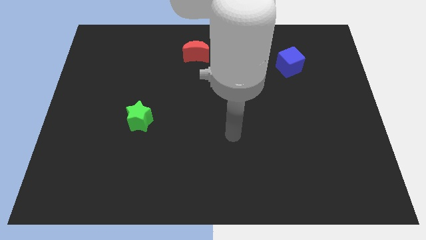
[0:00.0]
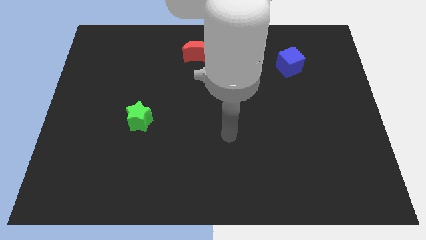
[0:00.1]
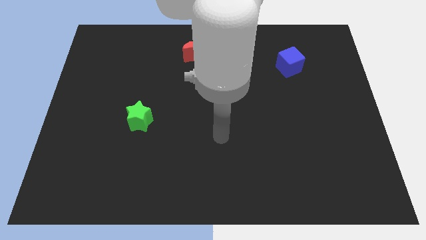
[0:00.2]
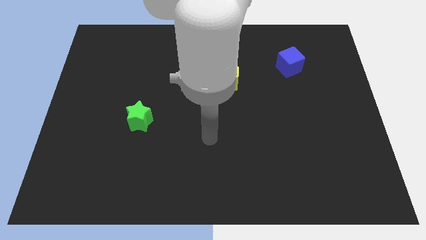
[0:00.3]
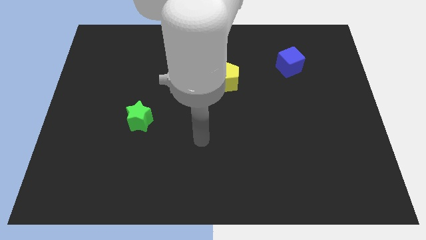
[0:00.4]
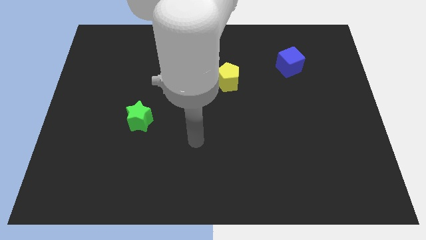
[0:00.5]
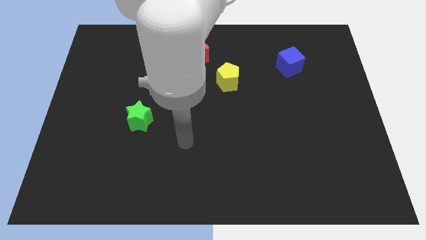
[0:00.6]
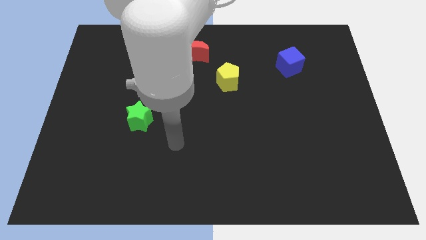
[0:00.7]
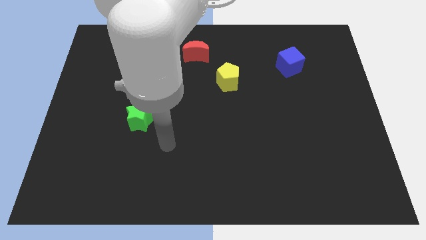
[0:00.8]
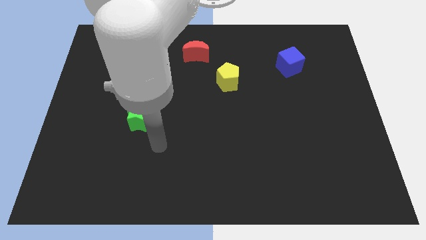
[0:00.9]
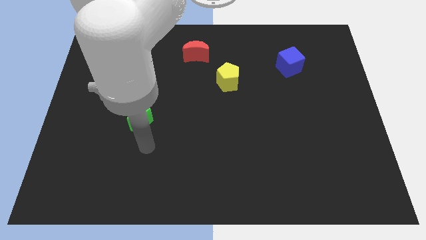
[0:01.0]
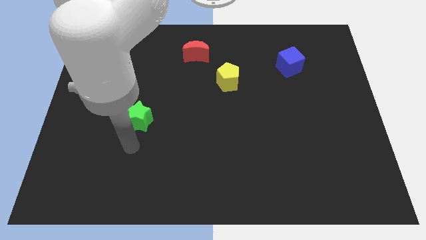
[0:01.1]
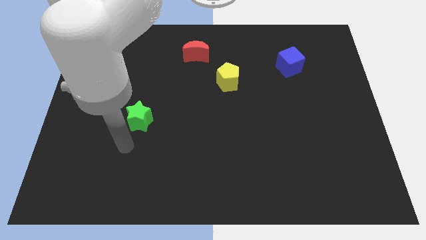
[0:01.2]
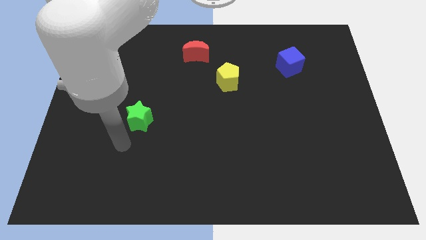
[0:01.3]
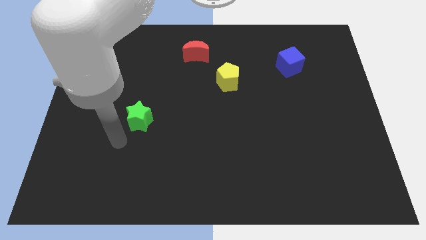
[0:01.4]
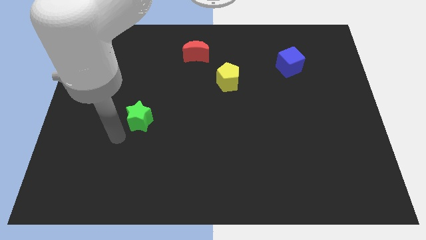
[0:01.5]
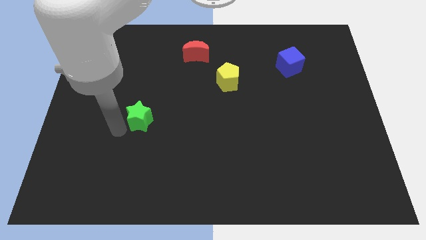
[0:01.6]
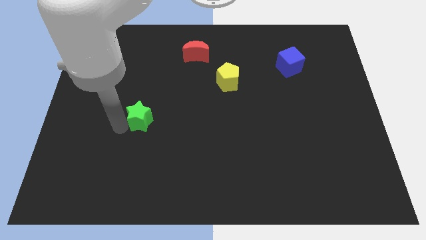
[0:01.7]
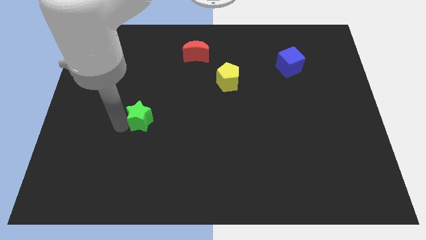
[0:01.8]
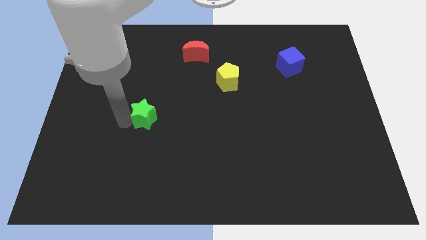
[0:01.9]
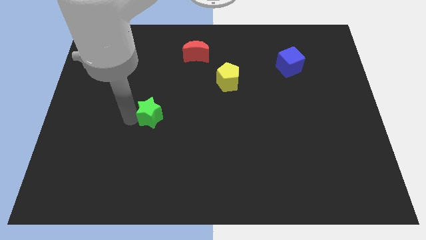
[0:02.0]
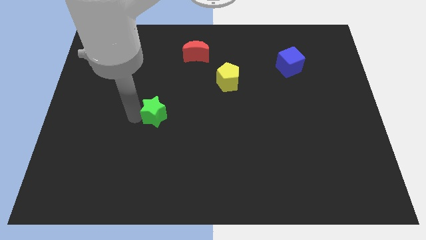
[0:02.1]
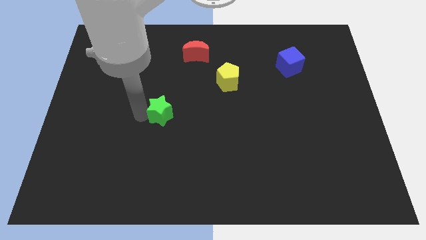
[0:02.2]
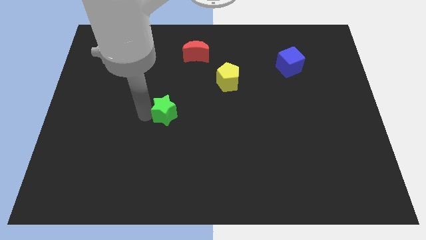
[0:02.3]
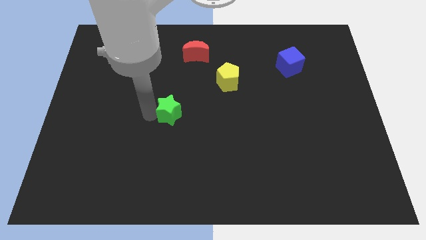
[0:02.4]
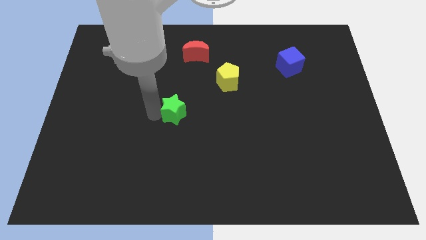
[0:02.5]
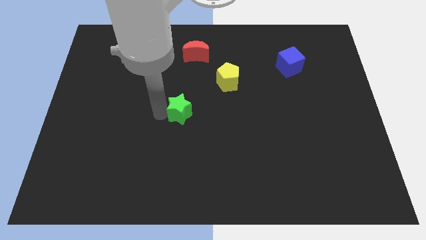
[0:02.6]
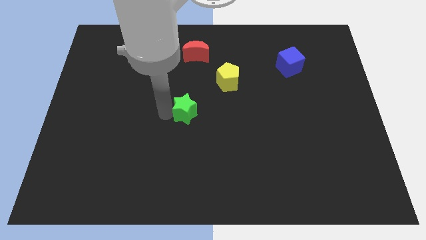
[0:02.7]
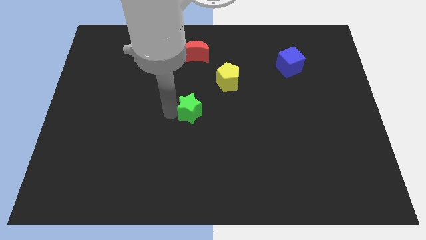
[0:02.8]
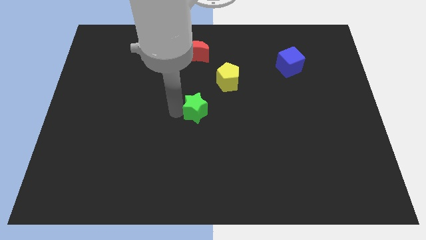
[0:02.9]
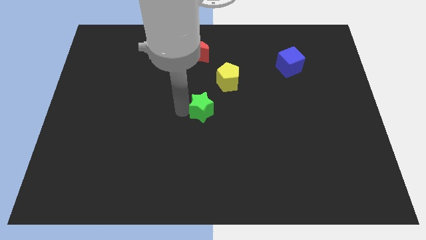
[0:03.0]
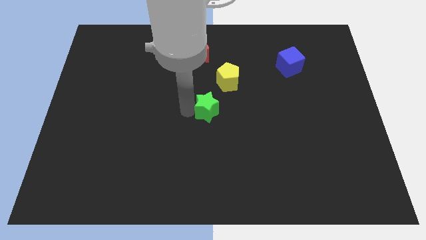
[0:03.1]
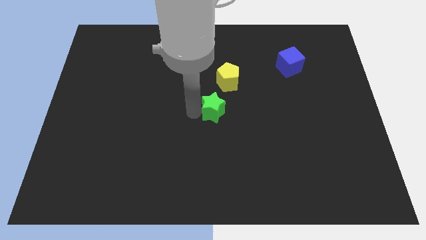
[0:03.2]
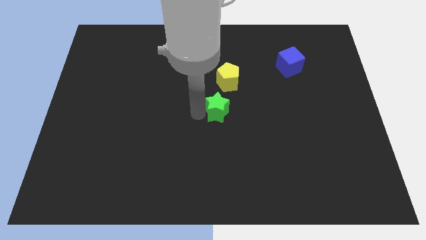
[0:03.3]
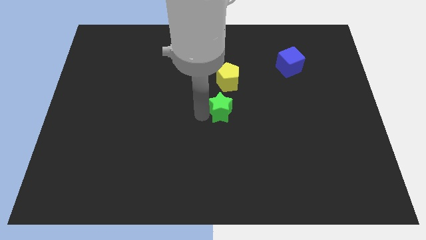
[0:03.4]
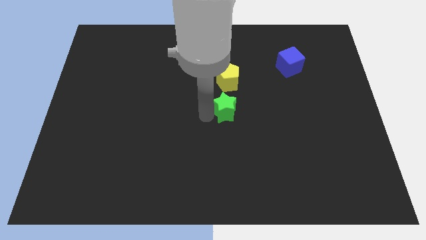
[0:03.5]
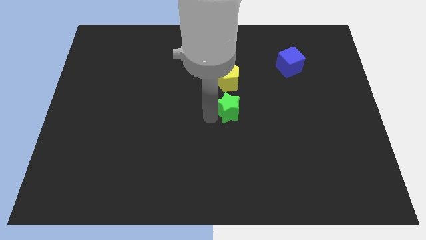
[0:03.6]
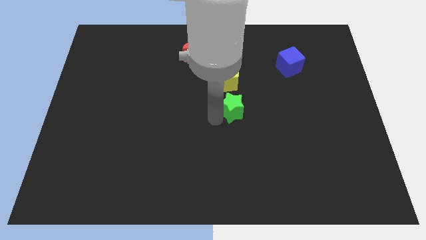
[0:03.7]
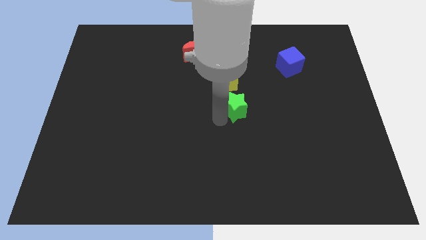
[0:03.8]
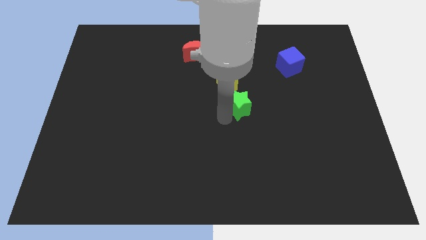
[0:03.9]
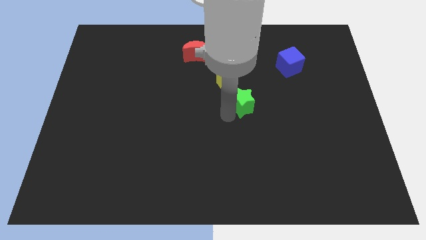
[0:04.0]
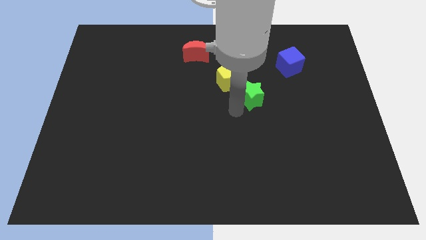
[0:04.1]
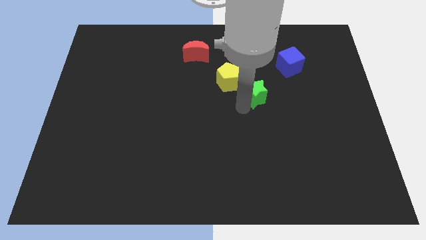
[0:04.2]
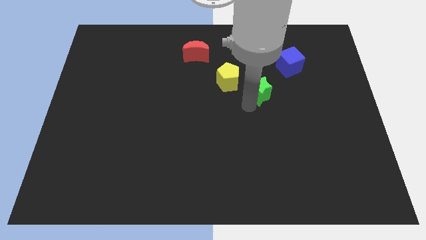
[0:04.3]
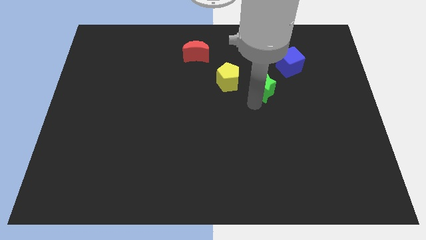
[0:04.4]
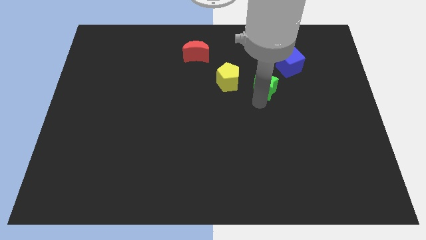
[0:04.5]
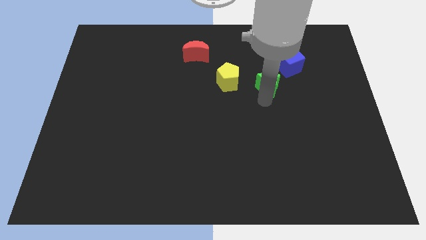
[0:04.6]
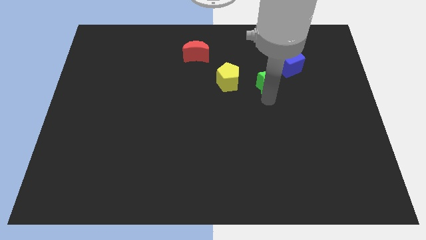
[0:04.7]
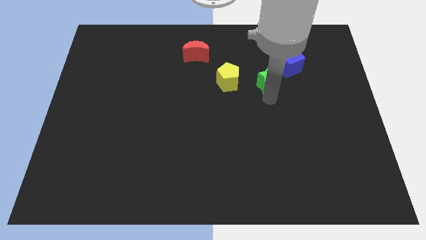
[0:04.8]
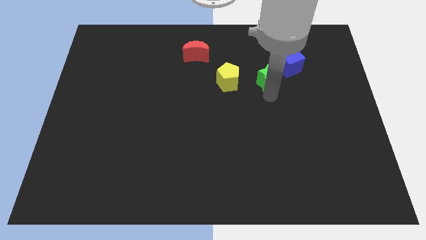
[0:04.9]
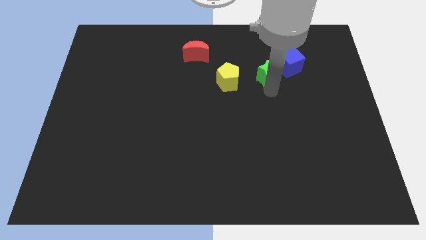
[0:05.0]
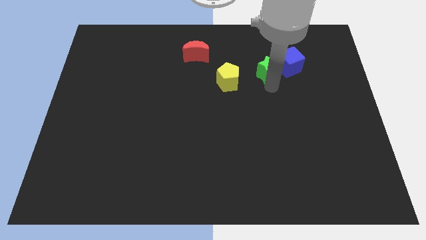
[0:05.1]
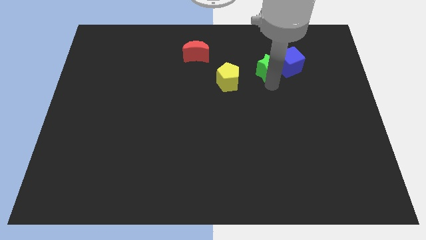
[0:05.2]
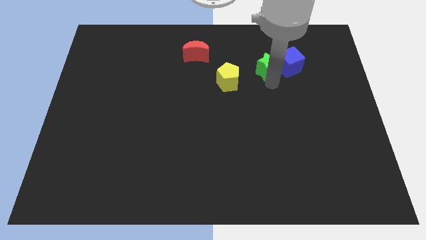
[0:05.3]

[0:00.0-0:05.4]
put the star to the cube

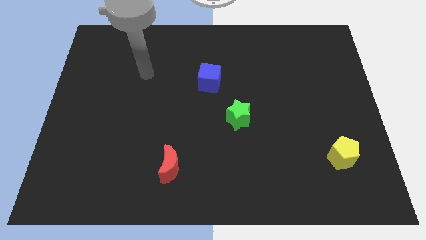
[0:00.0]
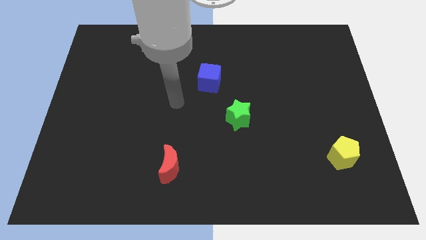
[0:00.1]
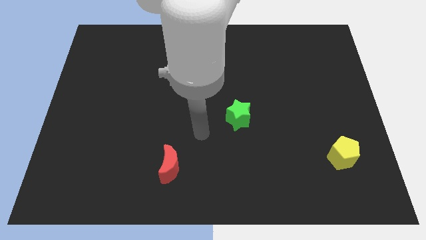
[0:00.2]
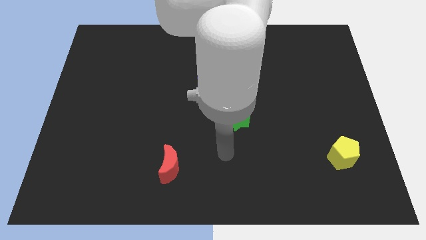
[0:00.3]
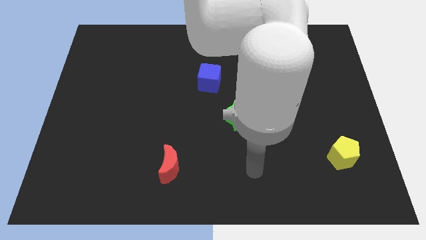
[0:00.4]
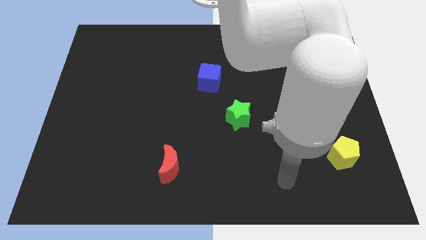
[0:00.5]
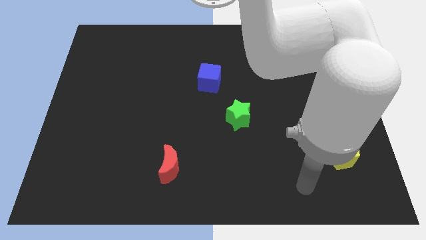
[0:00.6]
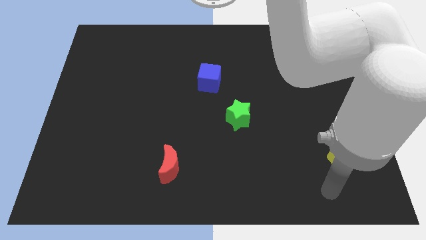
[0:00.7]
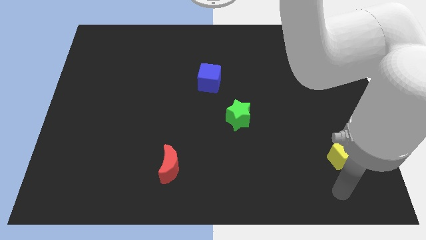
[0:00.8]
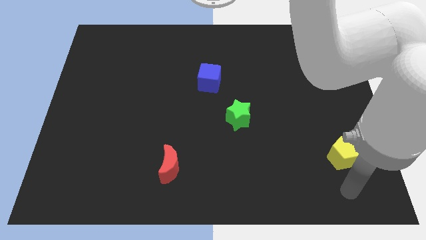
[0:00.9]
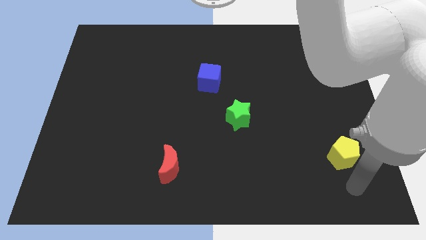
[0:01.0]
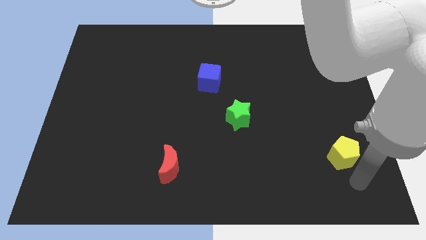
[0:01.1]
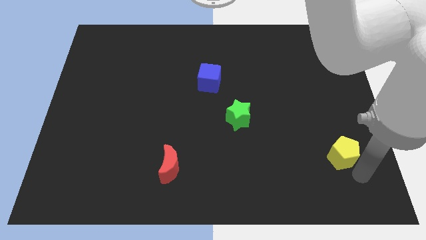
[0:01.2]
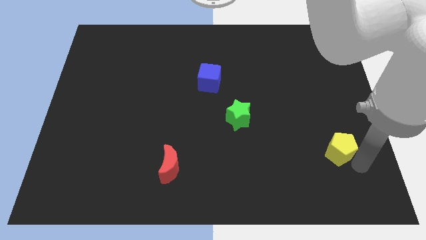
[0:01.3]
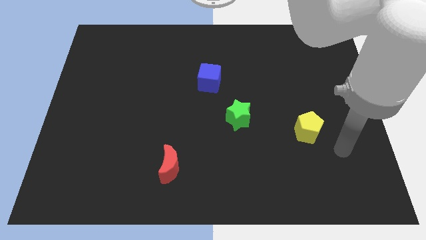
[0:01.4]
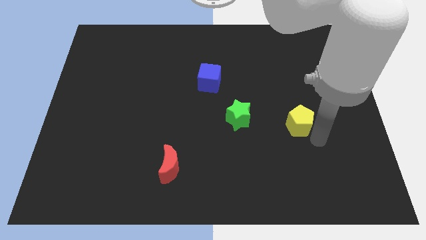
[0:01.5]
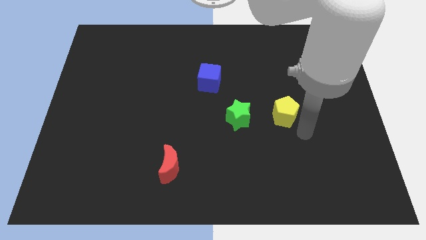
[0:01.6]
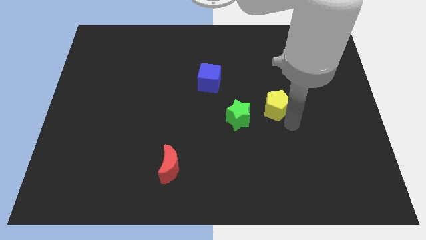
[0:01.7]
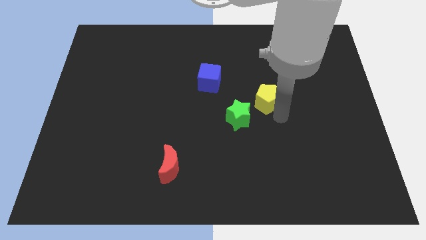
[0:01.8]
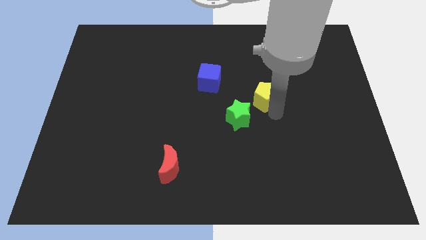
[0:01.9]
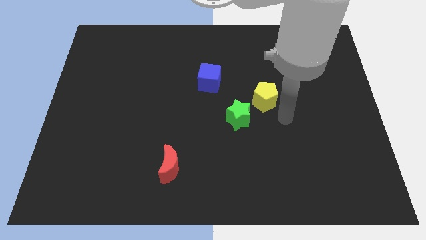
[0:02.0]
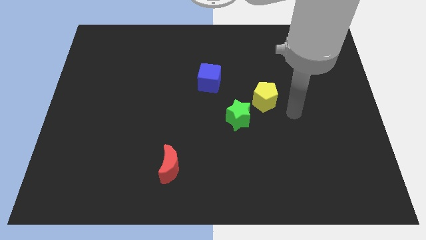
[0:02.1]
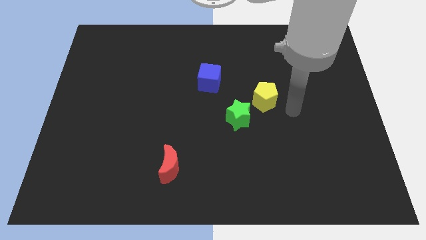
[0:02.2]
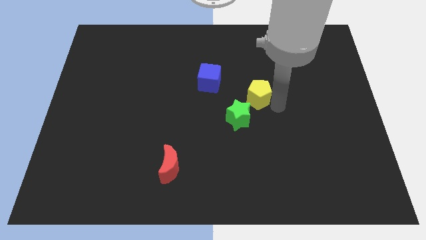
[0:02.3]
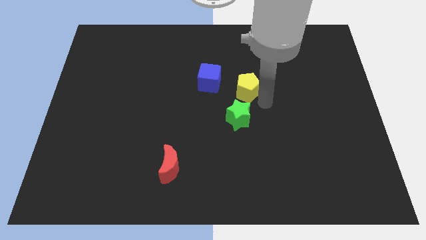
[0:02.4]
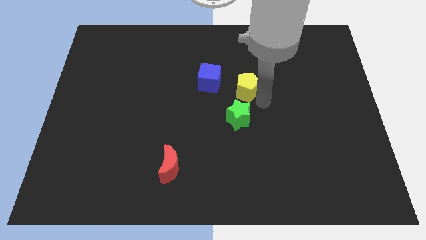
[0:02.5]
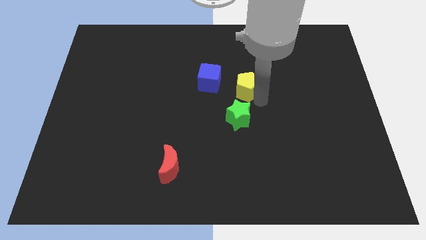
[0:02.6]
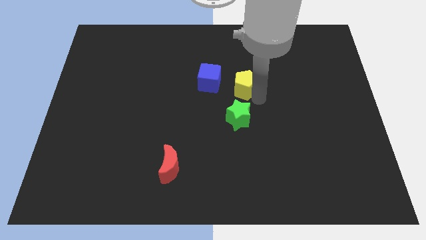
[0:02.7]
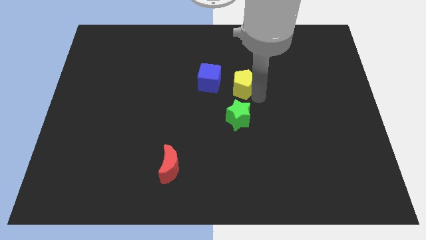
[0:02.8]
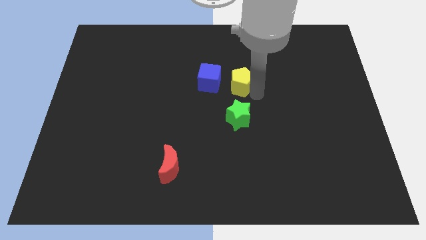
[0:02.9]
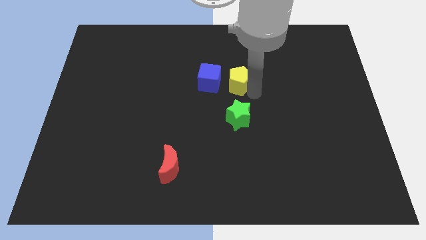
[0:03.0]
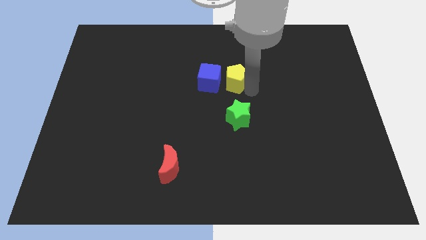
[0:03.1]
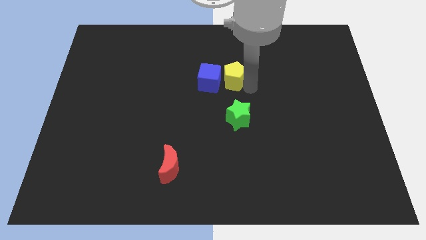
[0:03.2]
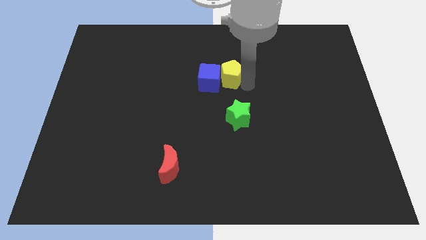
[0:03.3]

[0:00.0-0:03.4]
push the yellow block towards the blue block
